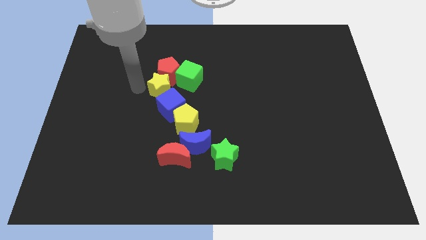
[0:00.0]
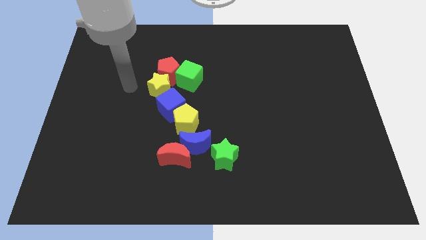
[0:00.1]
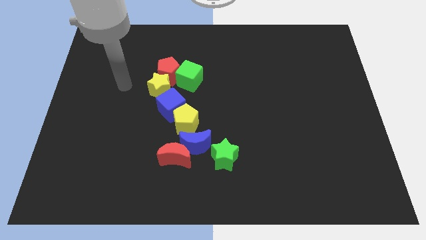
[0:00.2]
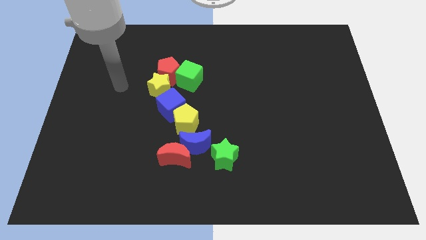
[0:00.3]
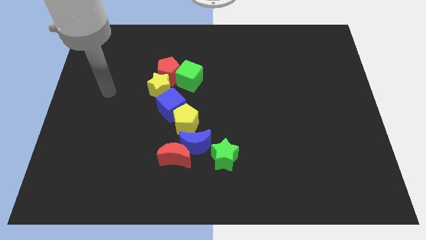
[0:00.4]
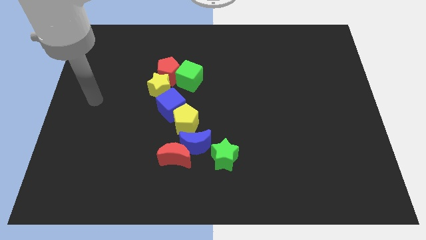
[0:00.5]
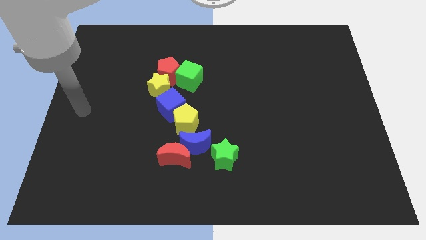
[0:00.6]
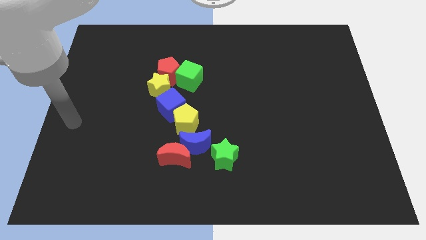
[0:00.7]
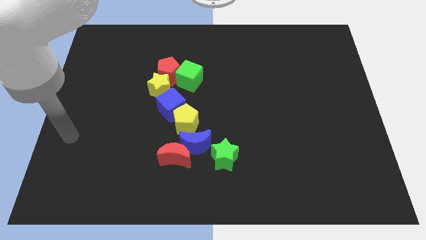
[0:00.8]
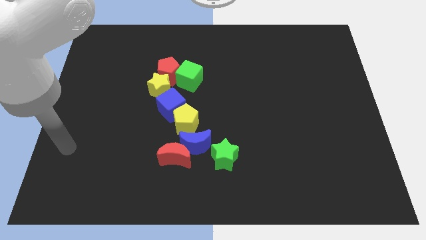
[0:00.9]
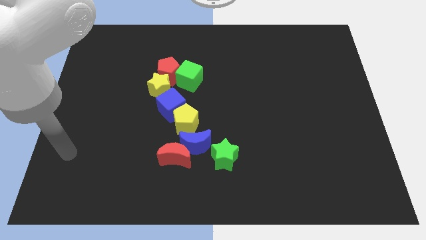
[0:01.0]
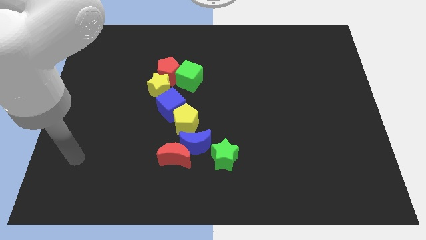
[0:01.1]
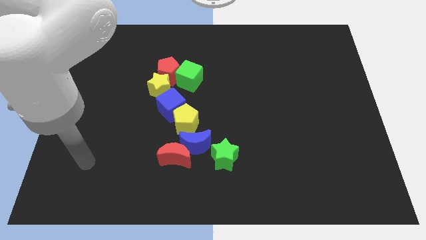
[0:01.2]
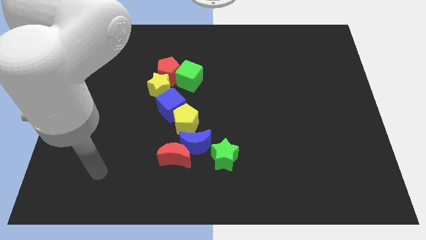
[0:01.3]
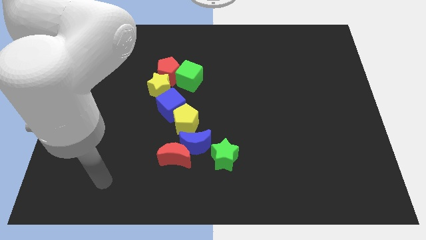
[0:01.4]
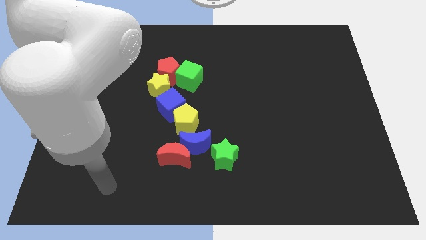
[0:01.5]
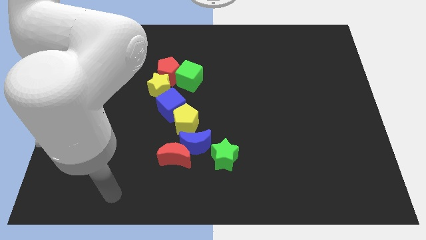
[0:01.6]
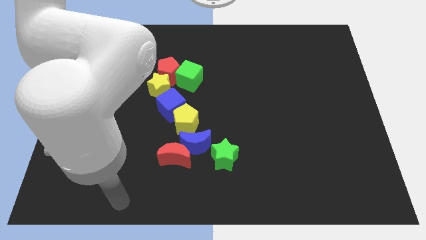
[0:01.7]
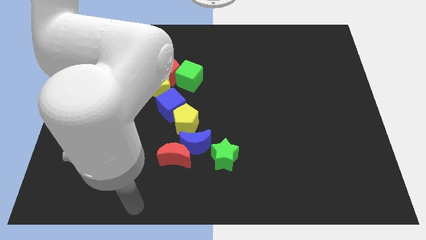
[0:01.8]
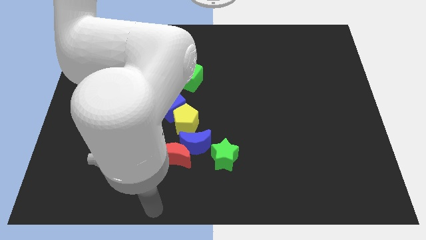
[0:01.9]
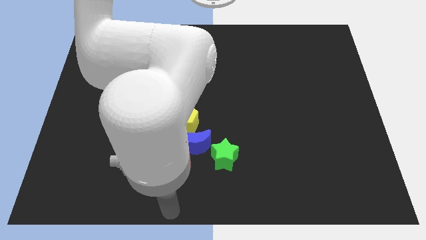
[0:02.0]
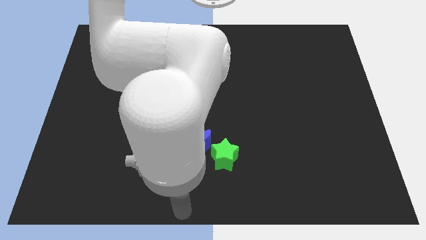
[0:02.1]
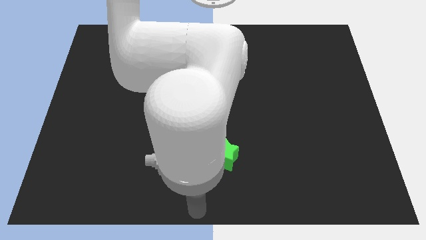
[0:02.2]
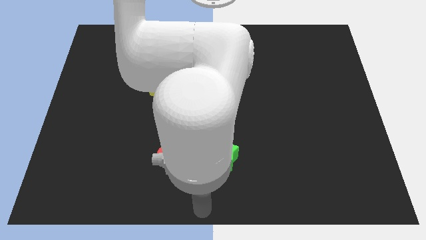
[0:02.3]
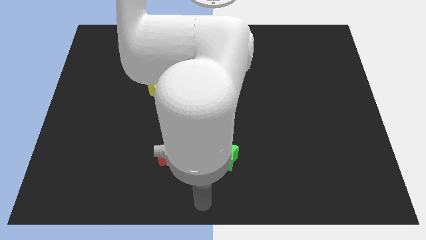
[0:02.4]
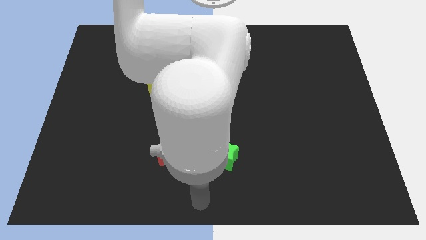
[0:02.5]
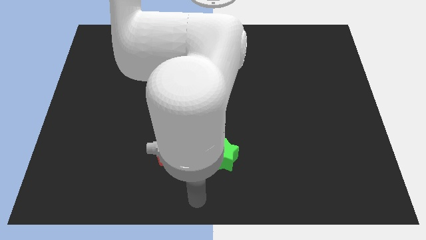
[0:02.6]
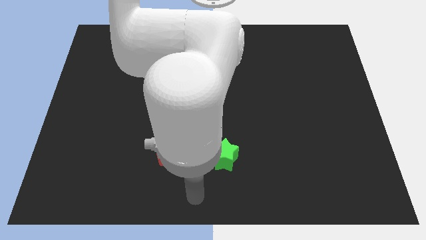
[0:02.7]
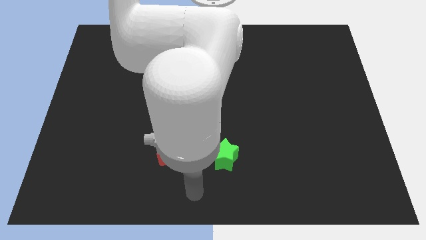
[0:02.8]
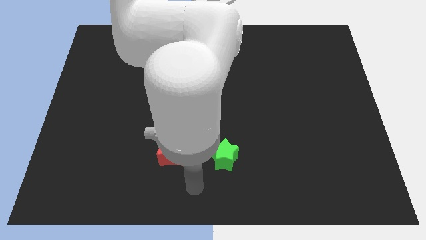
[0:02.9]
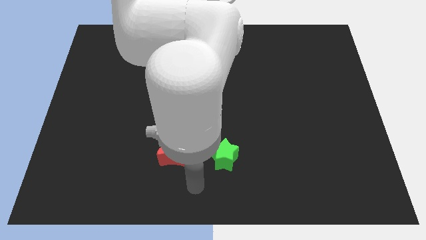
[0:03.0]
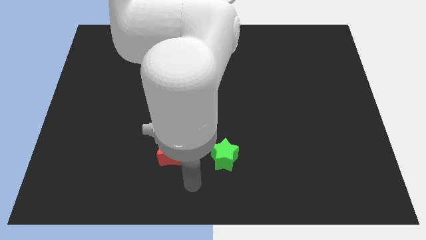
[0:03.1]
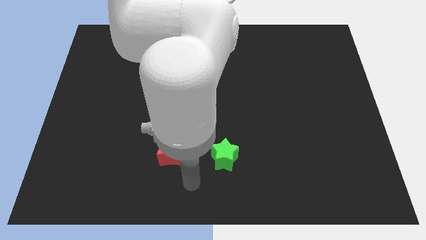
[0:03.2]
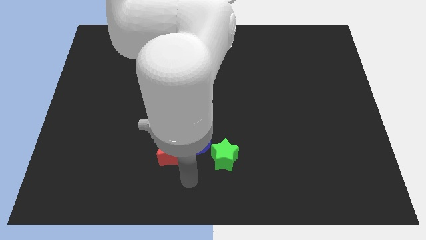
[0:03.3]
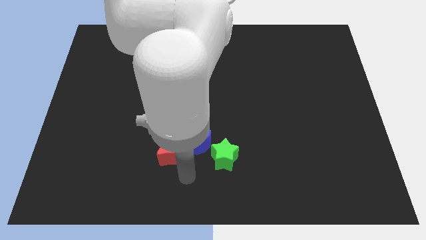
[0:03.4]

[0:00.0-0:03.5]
move your arm from the yellow star to the red moon

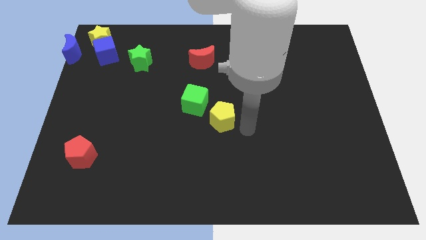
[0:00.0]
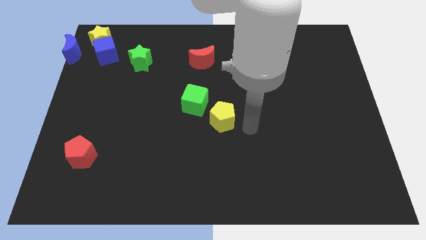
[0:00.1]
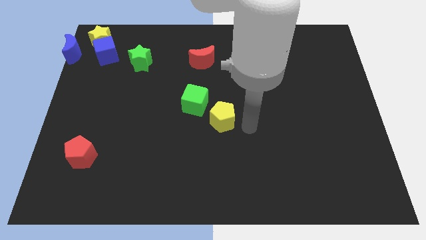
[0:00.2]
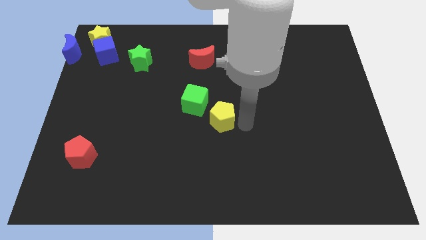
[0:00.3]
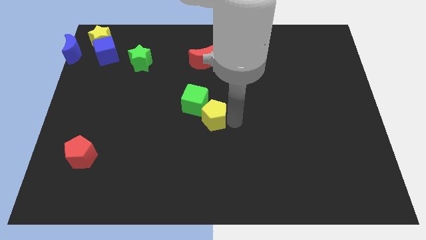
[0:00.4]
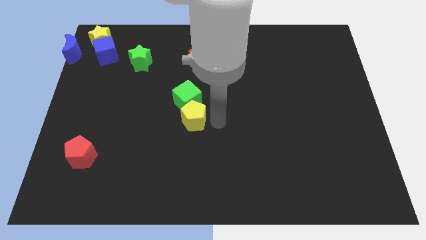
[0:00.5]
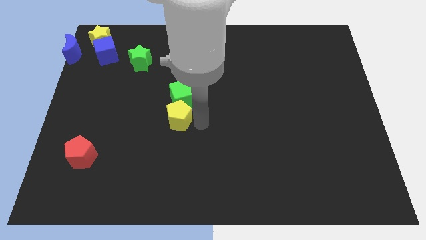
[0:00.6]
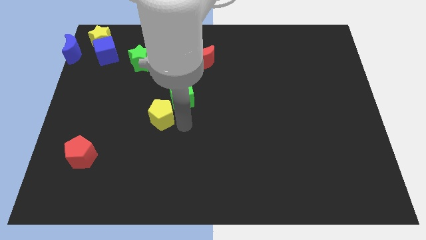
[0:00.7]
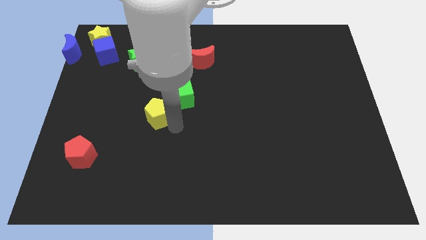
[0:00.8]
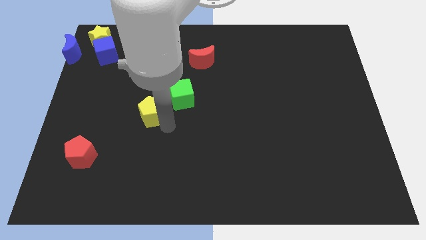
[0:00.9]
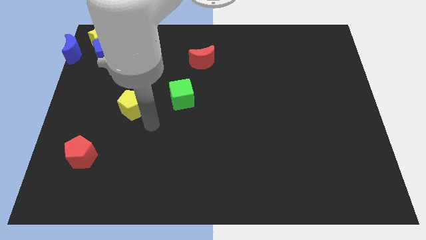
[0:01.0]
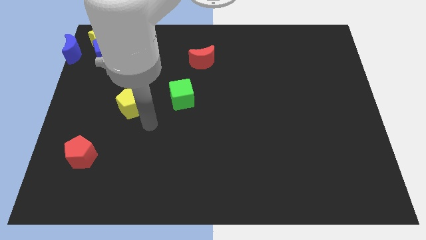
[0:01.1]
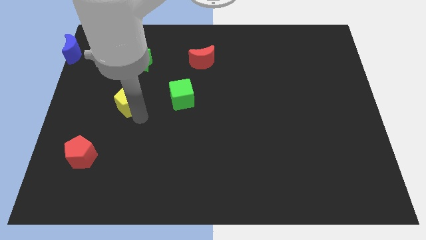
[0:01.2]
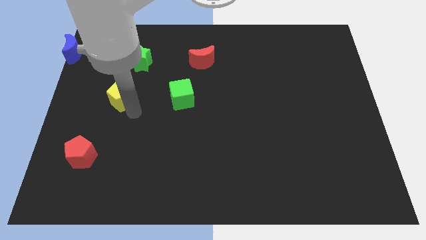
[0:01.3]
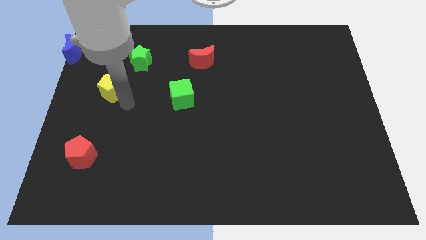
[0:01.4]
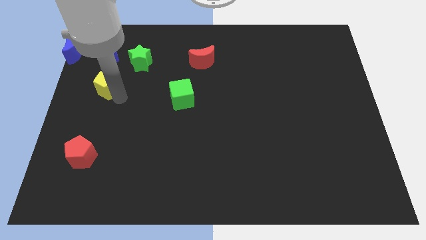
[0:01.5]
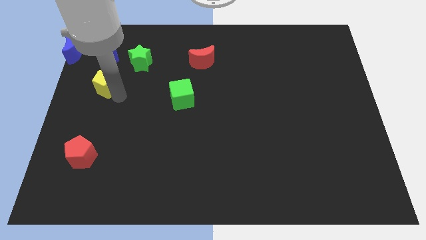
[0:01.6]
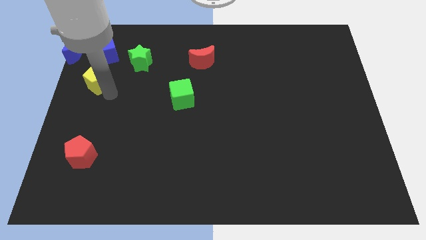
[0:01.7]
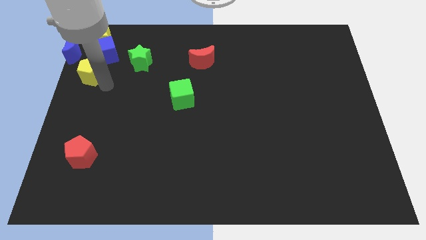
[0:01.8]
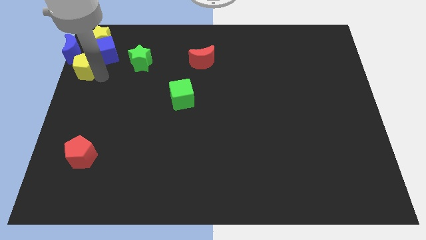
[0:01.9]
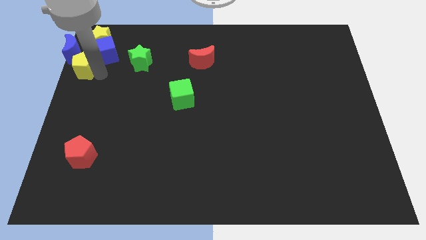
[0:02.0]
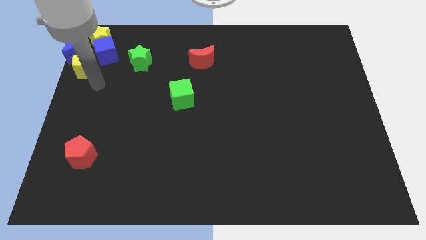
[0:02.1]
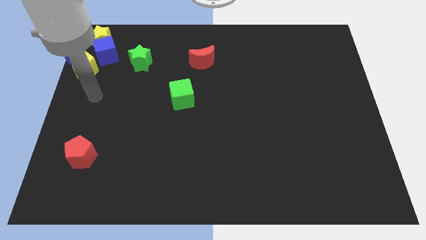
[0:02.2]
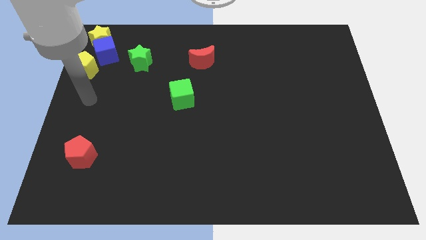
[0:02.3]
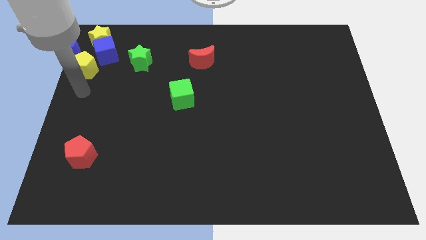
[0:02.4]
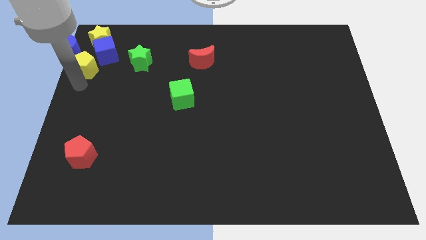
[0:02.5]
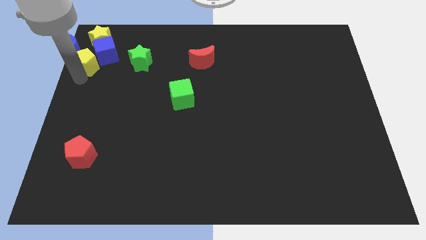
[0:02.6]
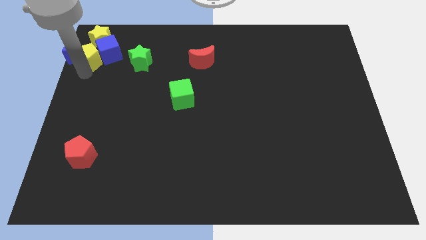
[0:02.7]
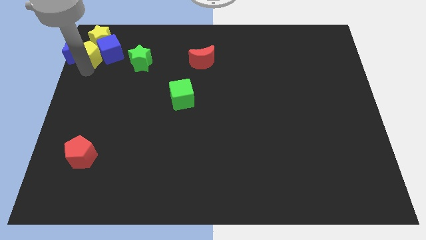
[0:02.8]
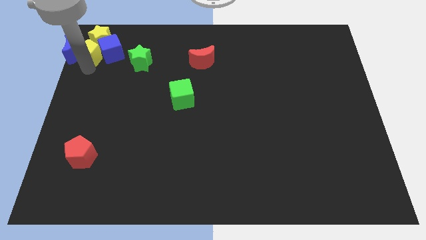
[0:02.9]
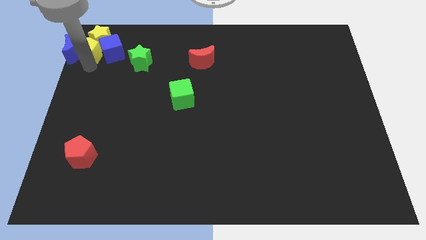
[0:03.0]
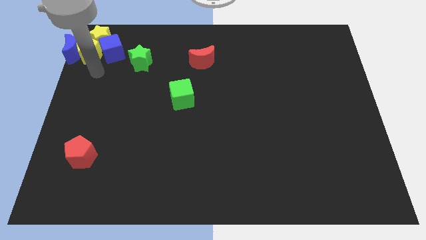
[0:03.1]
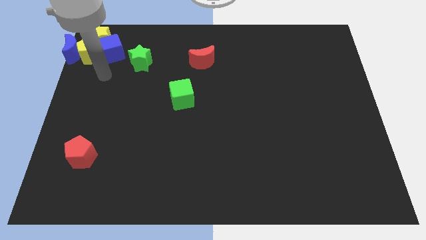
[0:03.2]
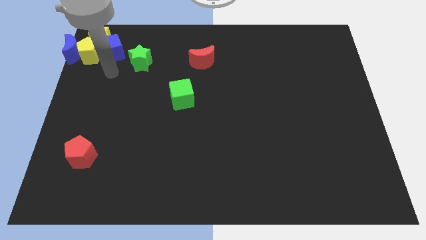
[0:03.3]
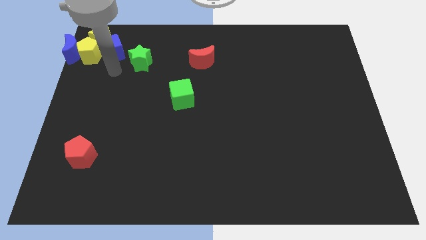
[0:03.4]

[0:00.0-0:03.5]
push the yellow pentagon into the yellow star

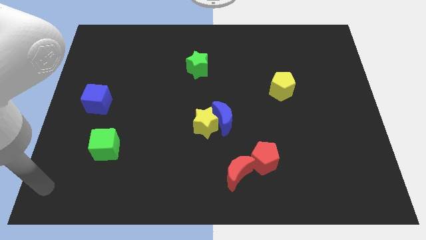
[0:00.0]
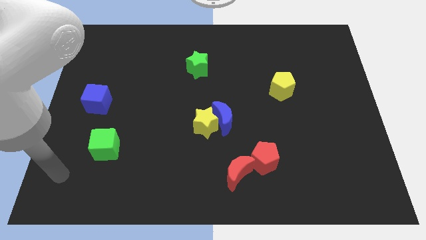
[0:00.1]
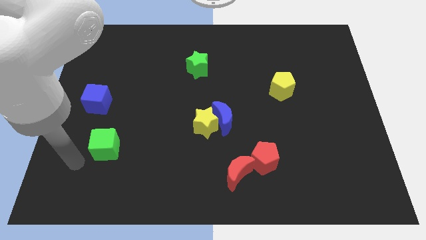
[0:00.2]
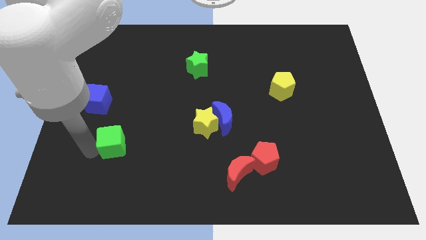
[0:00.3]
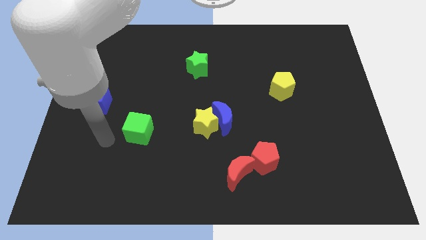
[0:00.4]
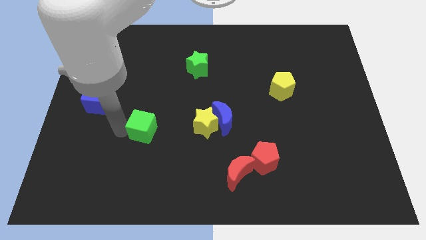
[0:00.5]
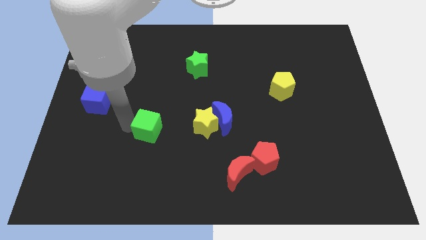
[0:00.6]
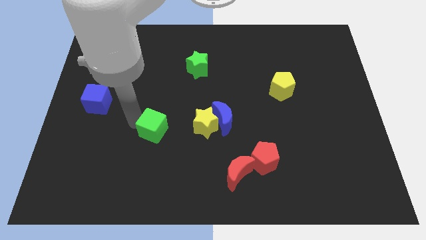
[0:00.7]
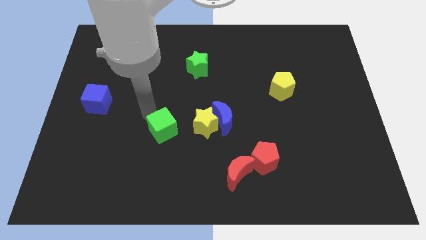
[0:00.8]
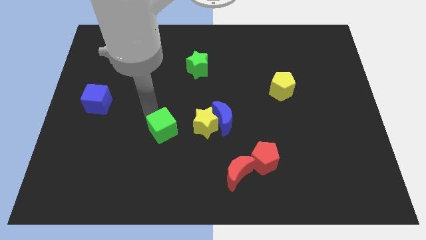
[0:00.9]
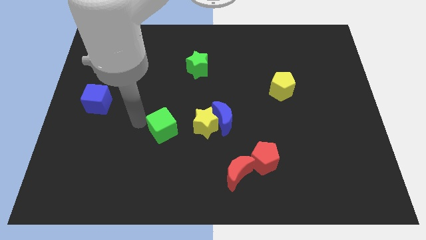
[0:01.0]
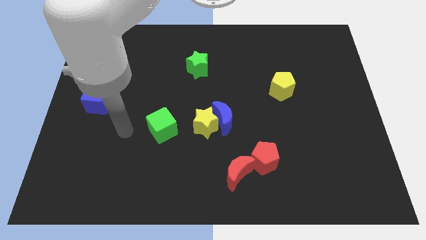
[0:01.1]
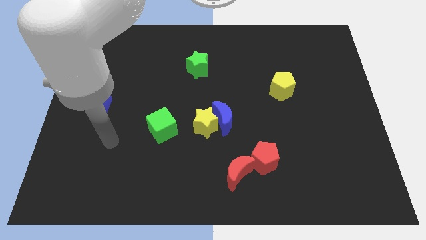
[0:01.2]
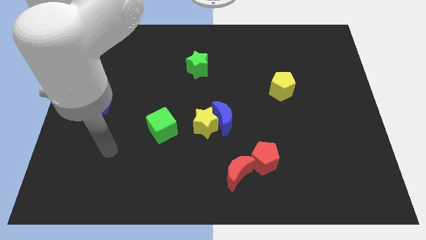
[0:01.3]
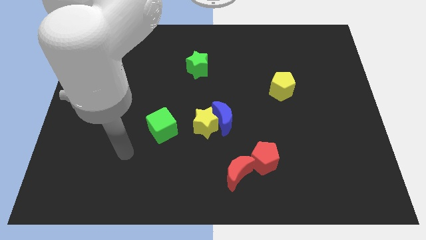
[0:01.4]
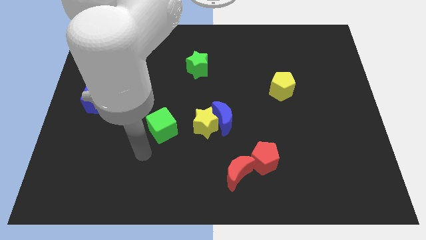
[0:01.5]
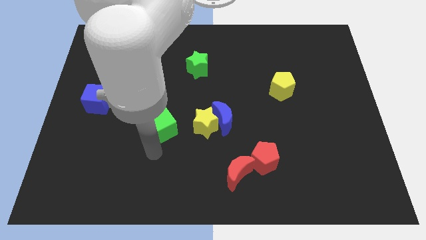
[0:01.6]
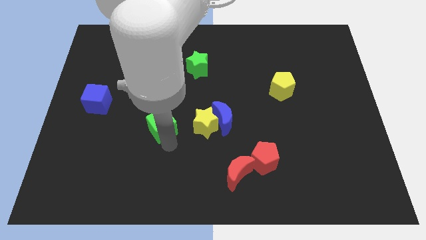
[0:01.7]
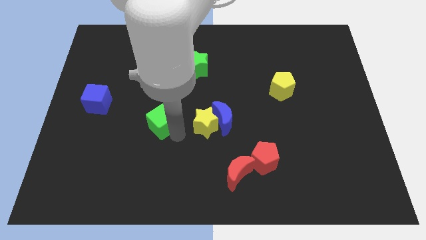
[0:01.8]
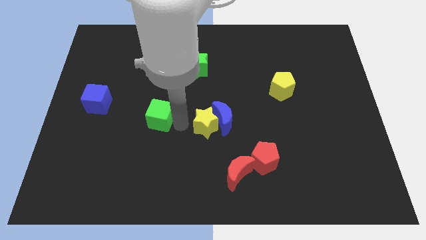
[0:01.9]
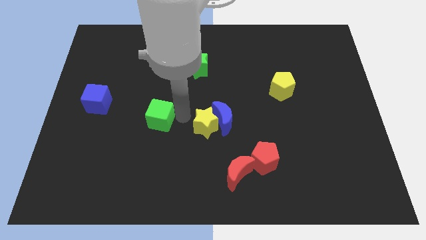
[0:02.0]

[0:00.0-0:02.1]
move green cube besides yellow star
